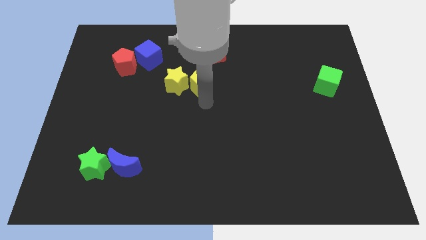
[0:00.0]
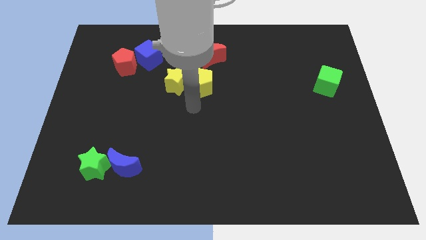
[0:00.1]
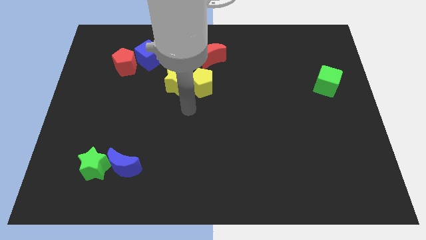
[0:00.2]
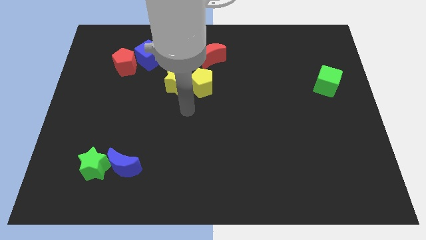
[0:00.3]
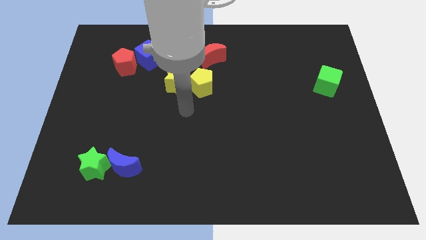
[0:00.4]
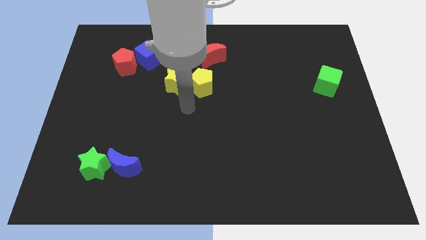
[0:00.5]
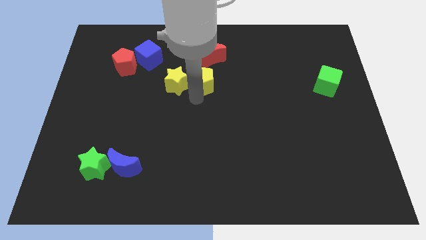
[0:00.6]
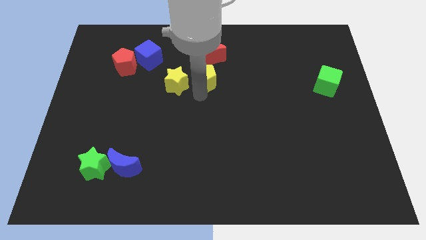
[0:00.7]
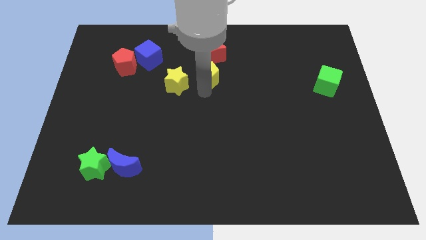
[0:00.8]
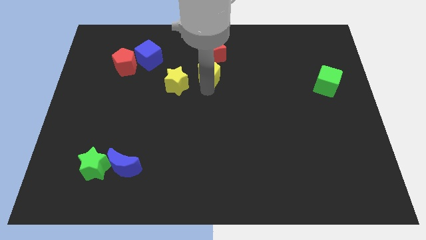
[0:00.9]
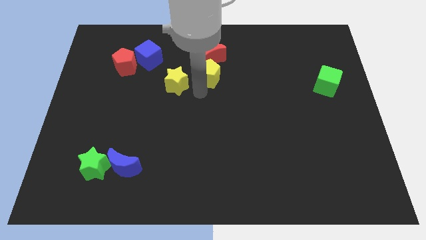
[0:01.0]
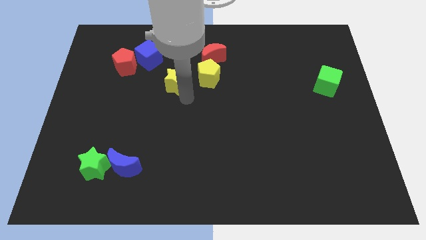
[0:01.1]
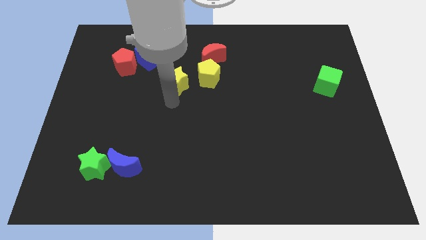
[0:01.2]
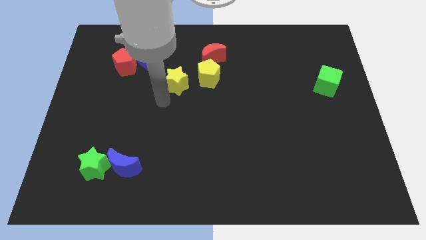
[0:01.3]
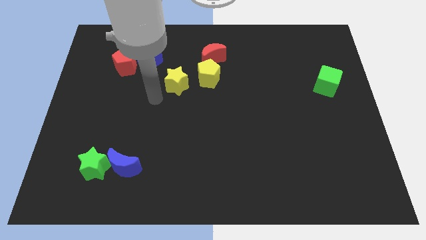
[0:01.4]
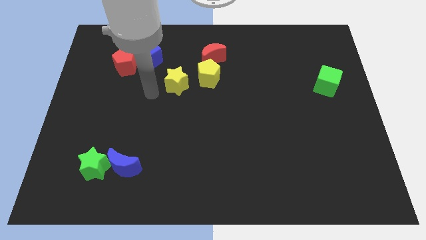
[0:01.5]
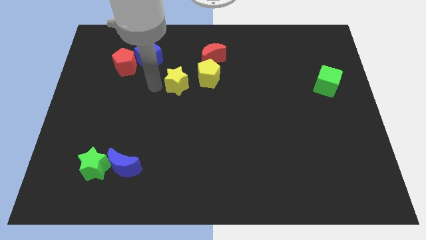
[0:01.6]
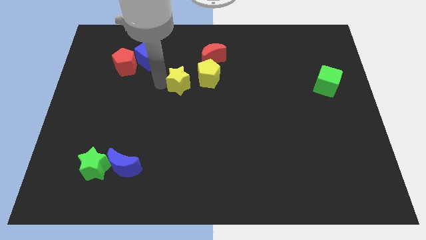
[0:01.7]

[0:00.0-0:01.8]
place the yellow pentagon at the bottom of the red crescent

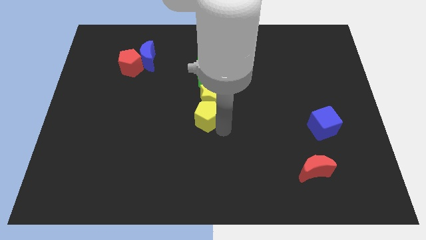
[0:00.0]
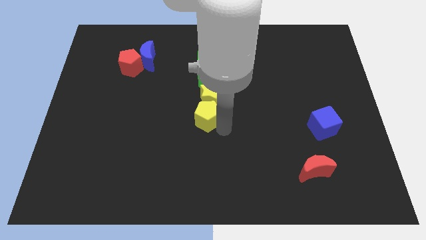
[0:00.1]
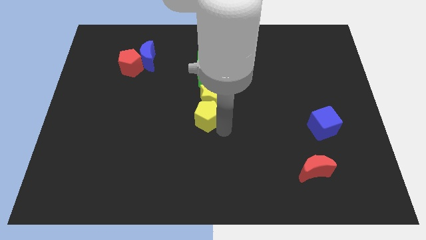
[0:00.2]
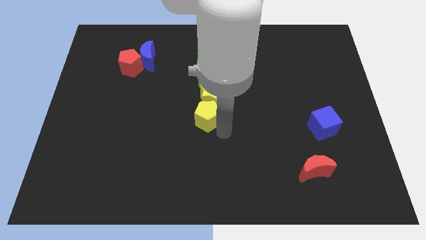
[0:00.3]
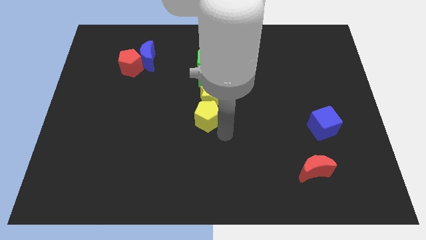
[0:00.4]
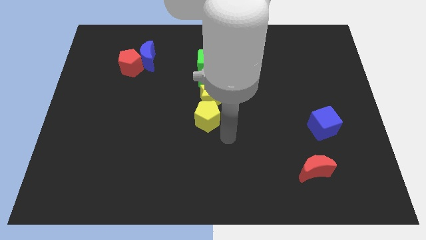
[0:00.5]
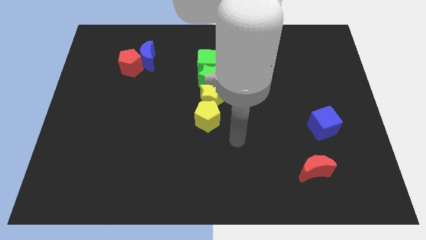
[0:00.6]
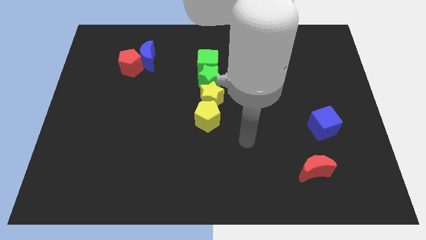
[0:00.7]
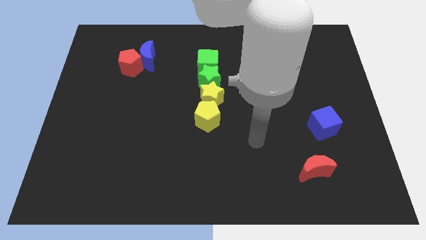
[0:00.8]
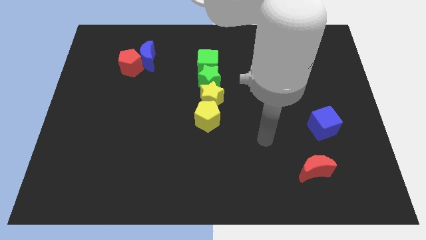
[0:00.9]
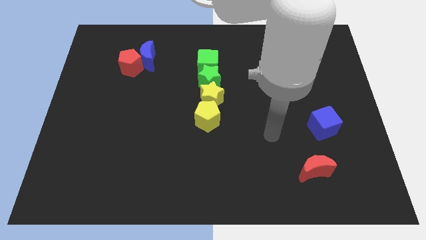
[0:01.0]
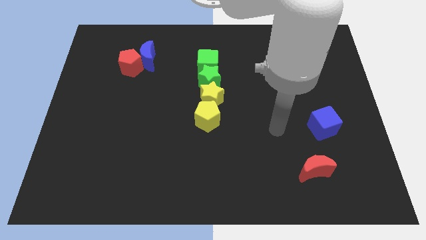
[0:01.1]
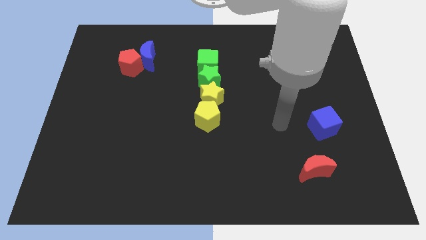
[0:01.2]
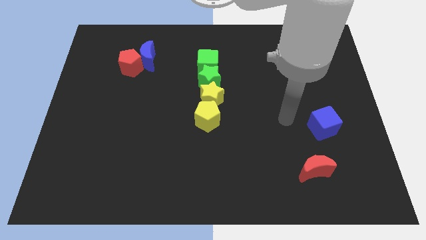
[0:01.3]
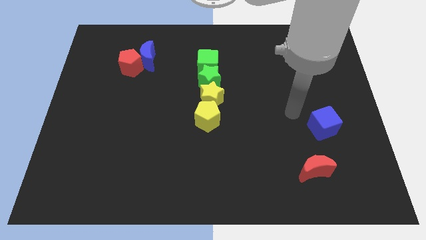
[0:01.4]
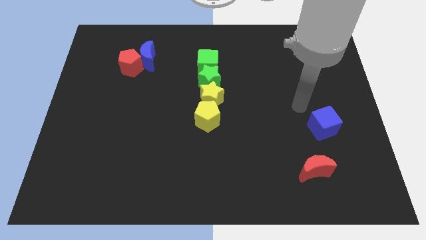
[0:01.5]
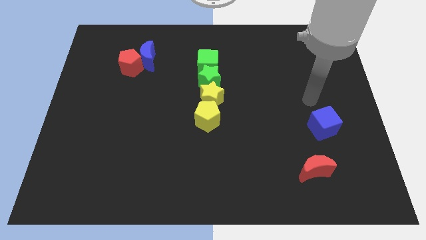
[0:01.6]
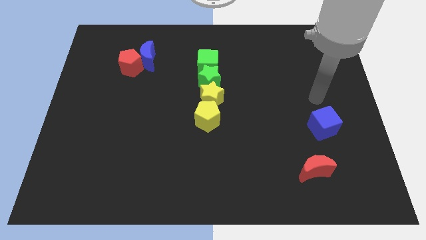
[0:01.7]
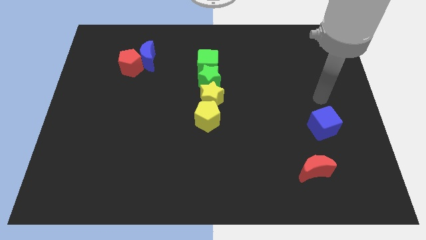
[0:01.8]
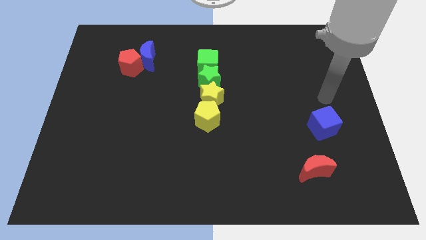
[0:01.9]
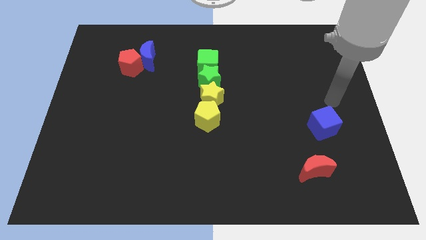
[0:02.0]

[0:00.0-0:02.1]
move the arm towards the center right of the board

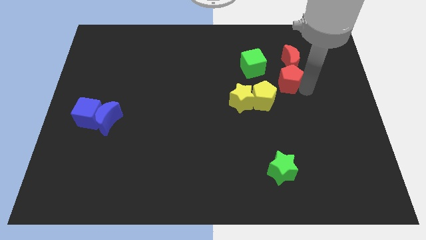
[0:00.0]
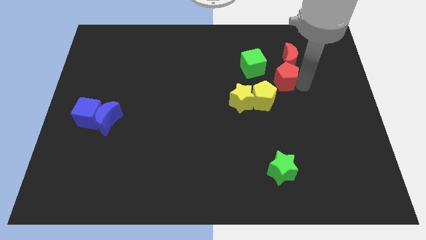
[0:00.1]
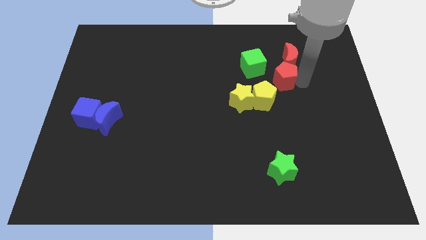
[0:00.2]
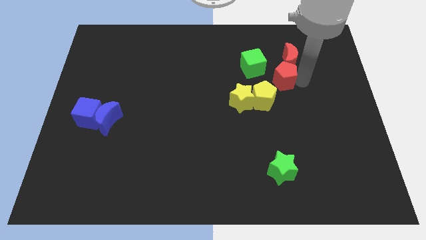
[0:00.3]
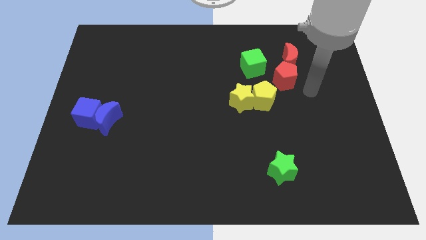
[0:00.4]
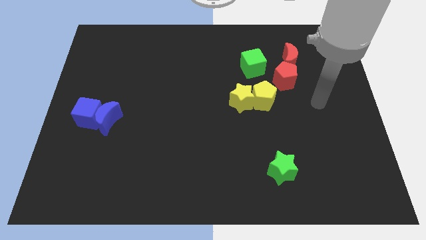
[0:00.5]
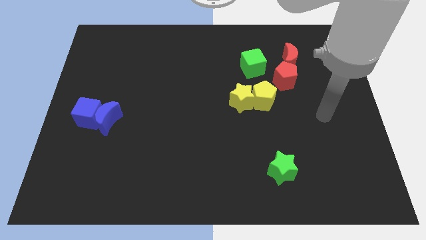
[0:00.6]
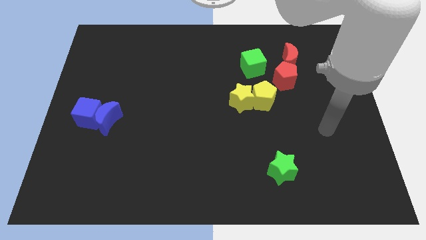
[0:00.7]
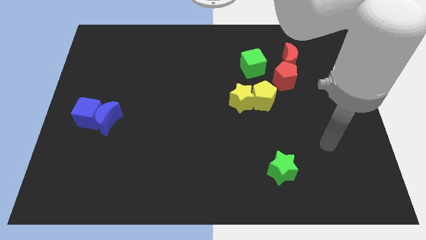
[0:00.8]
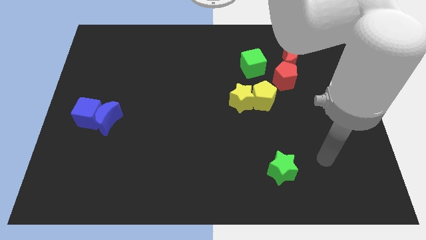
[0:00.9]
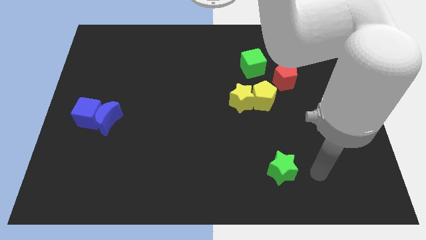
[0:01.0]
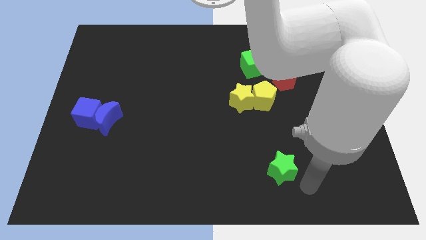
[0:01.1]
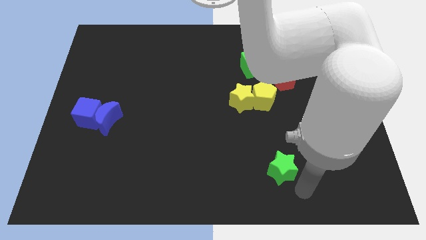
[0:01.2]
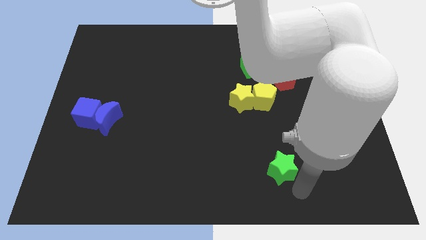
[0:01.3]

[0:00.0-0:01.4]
move your arm below the green star

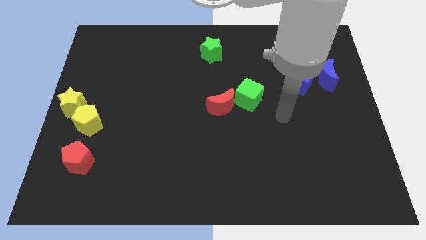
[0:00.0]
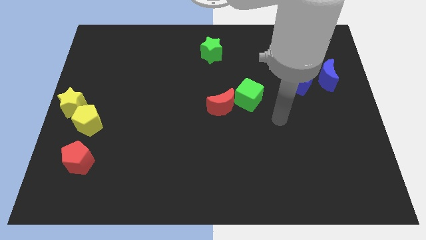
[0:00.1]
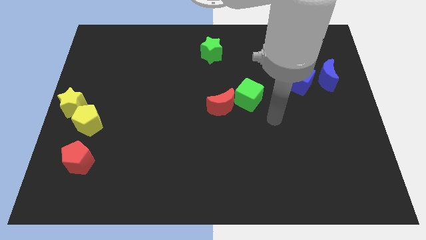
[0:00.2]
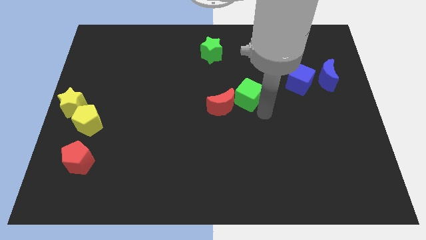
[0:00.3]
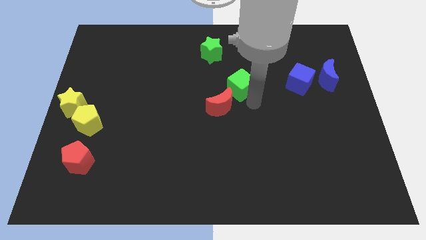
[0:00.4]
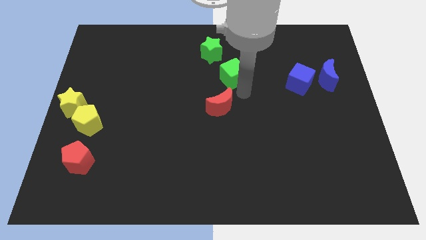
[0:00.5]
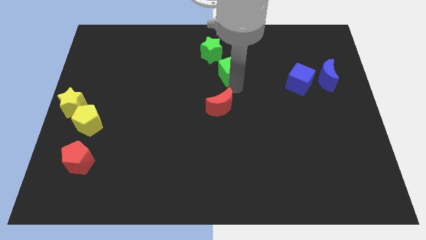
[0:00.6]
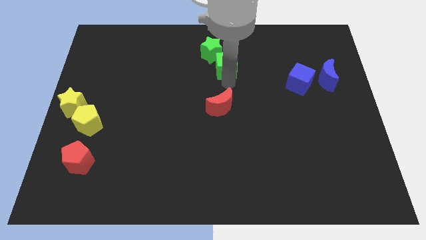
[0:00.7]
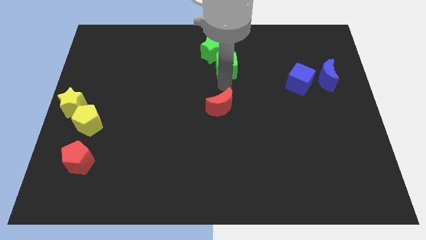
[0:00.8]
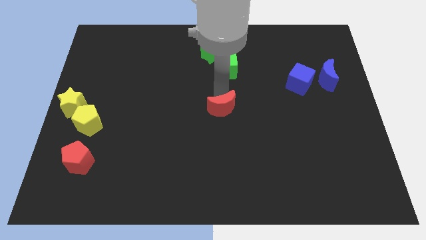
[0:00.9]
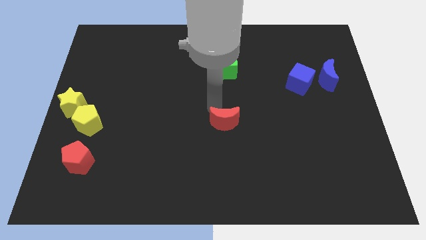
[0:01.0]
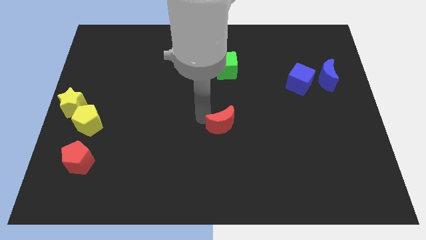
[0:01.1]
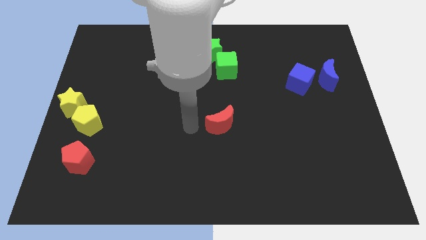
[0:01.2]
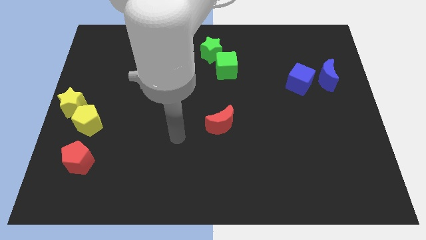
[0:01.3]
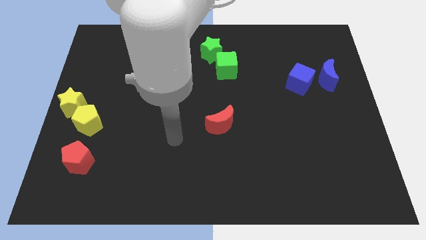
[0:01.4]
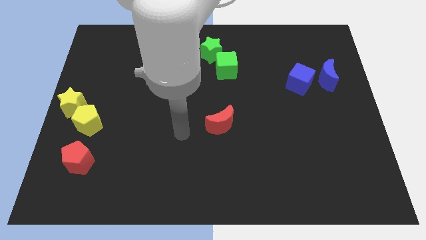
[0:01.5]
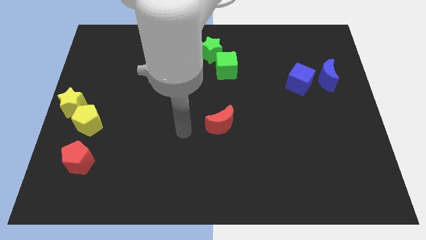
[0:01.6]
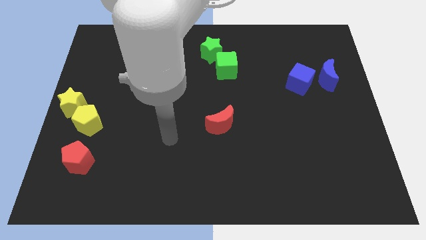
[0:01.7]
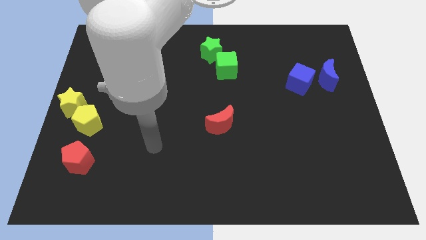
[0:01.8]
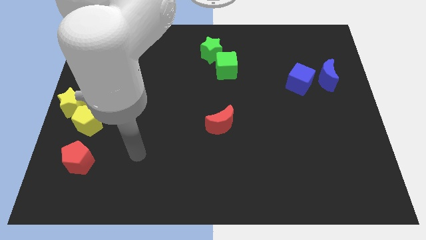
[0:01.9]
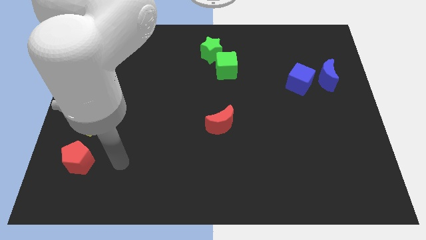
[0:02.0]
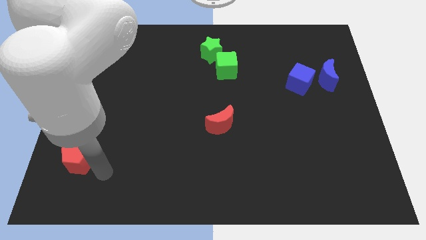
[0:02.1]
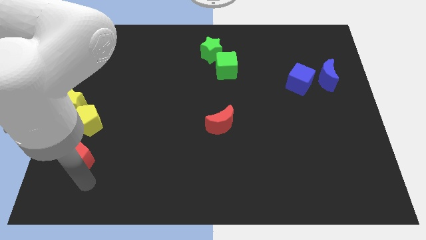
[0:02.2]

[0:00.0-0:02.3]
place the red moon in the middle of the board

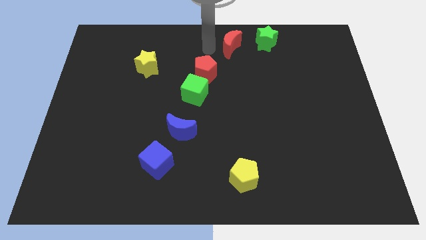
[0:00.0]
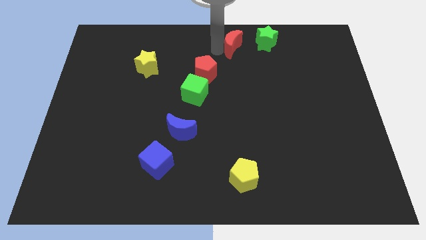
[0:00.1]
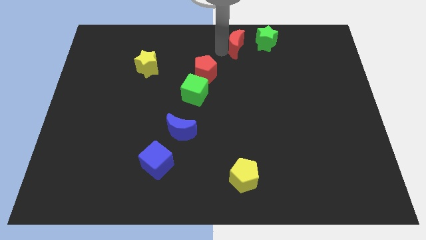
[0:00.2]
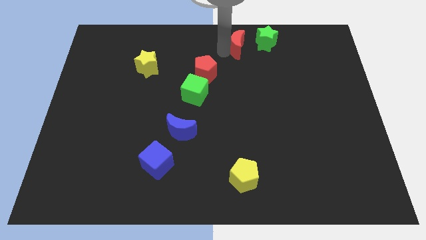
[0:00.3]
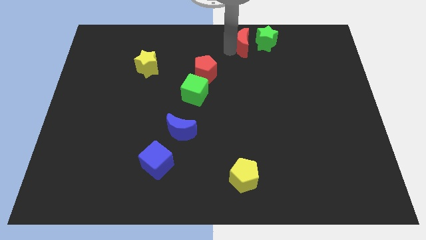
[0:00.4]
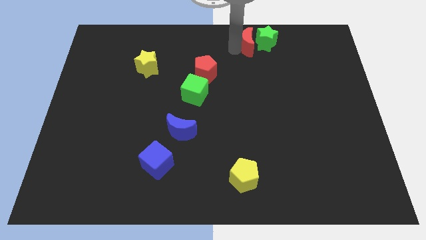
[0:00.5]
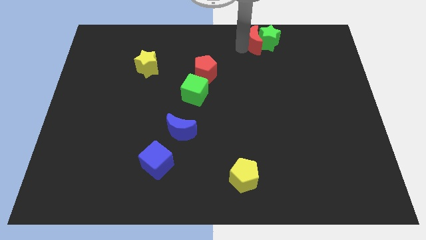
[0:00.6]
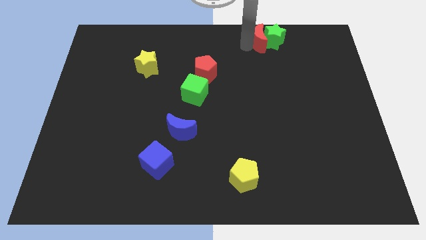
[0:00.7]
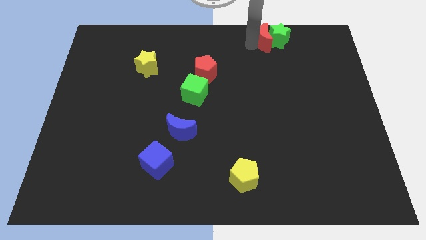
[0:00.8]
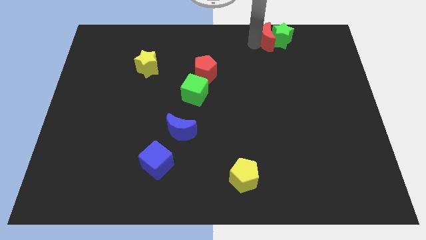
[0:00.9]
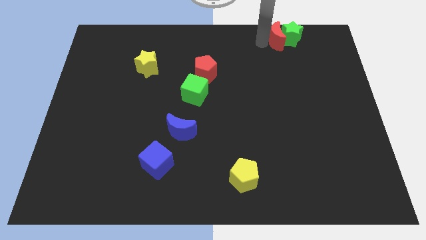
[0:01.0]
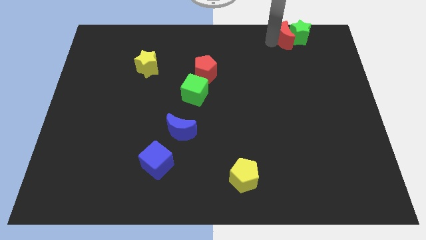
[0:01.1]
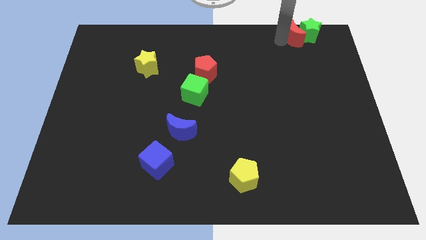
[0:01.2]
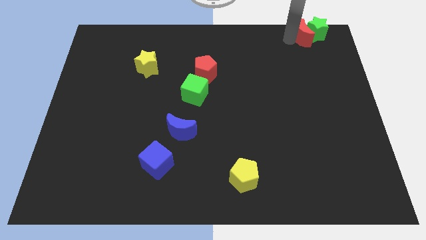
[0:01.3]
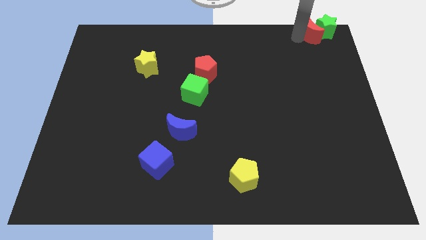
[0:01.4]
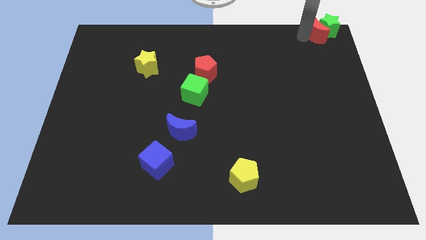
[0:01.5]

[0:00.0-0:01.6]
move the green star and the red crescent to the top right of the board
